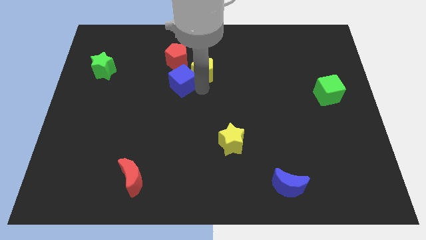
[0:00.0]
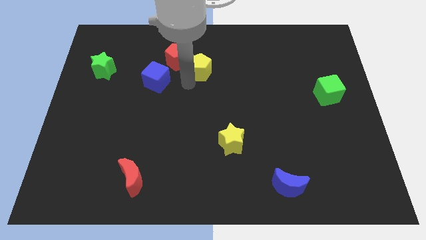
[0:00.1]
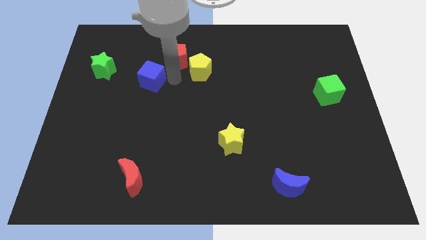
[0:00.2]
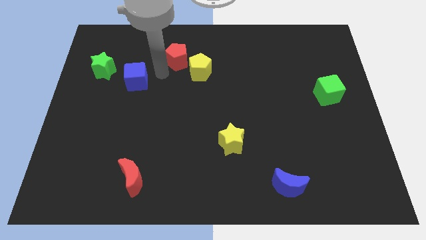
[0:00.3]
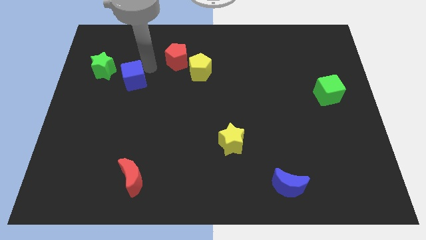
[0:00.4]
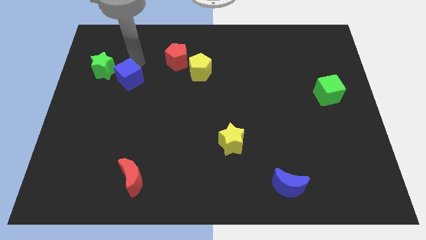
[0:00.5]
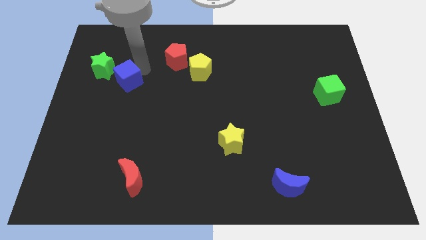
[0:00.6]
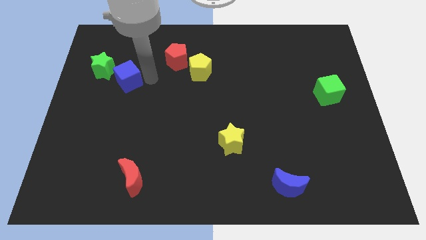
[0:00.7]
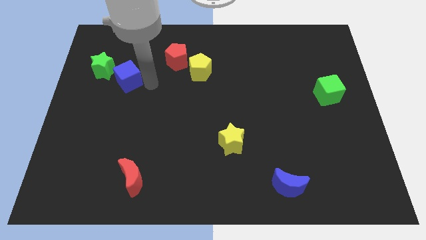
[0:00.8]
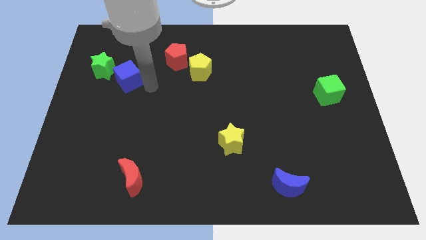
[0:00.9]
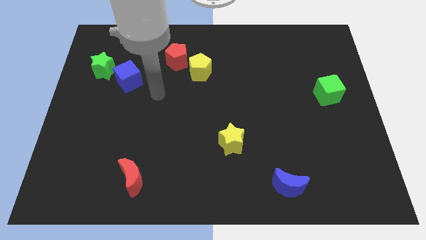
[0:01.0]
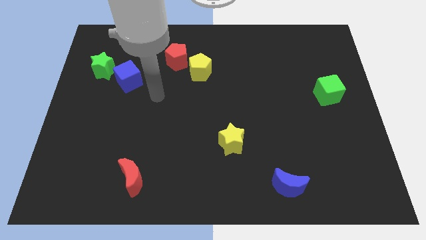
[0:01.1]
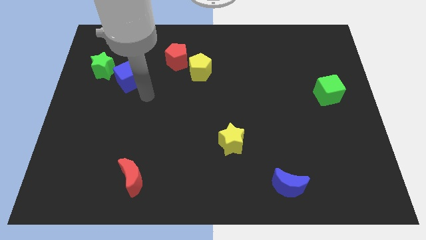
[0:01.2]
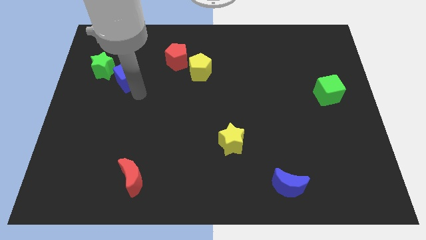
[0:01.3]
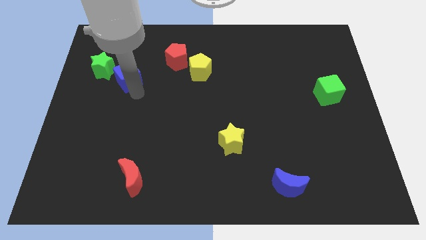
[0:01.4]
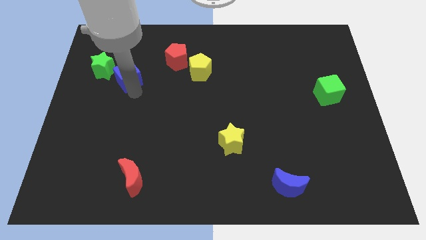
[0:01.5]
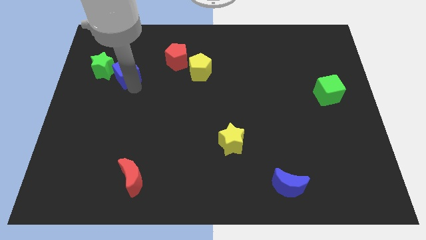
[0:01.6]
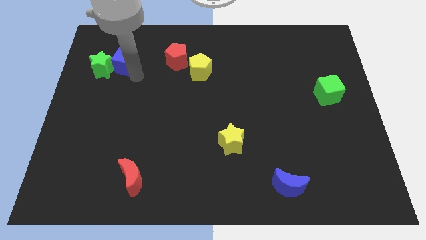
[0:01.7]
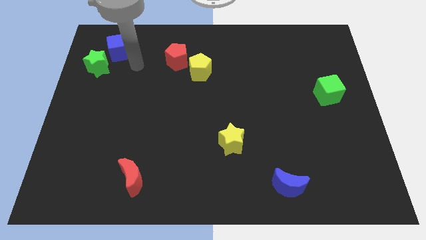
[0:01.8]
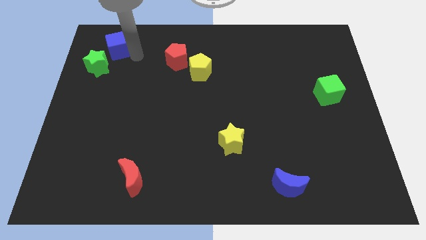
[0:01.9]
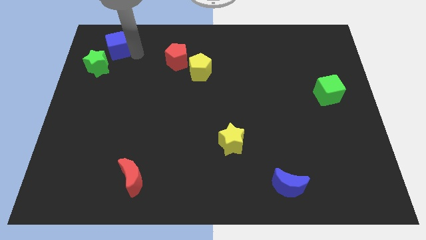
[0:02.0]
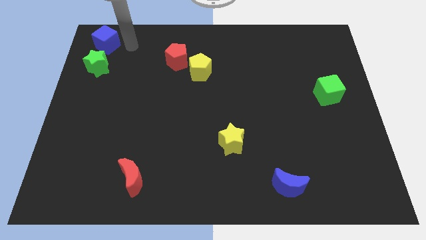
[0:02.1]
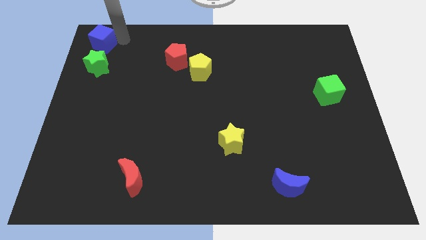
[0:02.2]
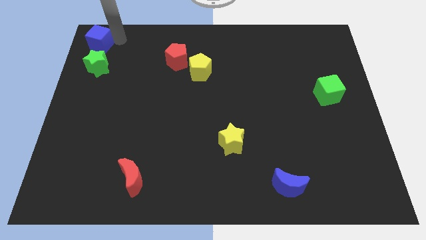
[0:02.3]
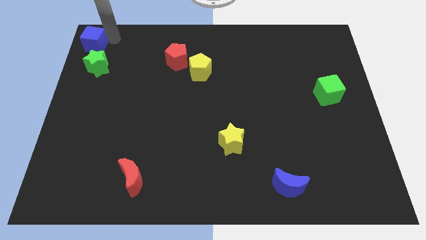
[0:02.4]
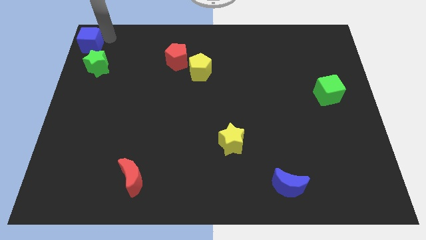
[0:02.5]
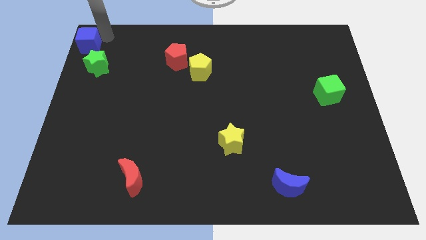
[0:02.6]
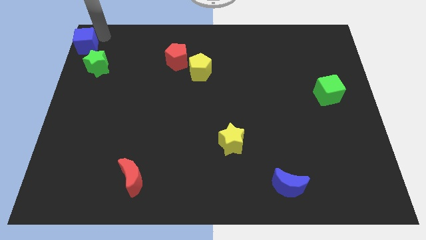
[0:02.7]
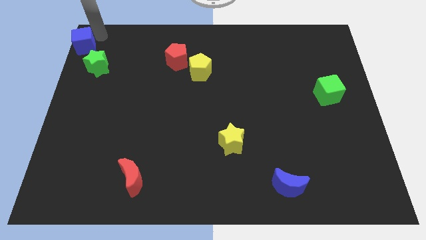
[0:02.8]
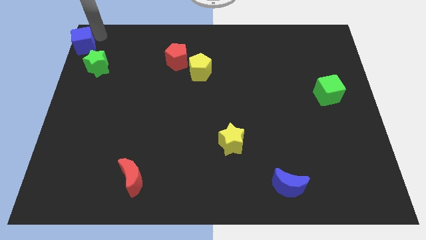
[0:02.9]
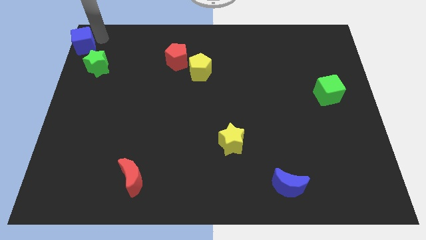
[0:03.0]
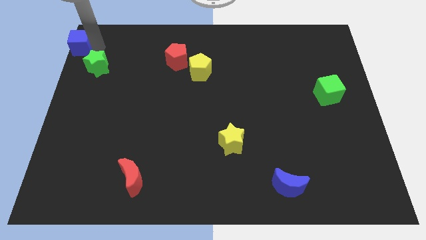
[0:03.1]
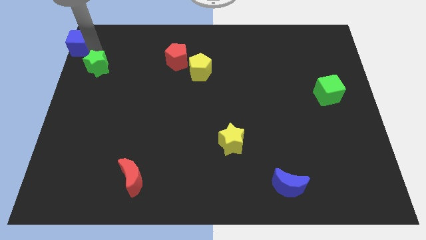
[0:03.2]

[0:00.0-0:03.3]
put the blue cube at the top left corner of the board

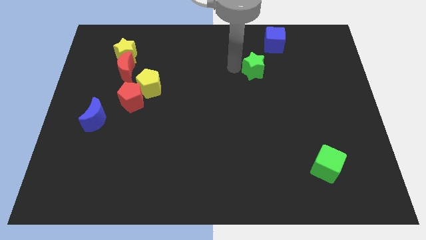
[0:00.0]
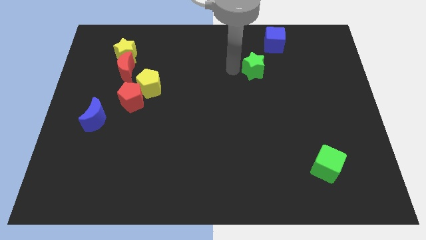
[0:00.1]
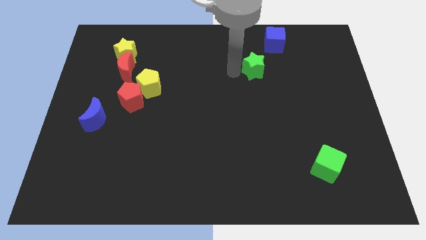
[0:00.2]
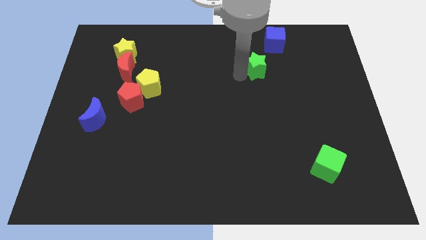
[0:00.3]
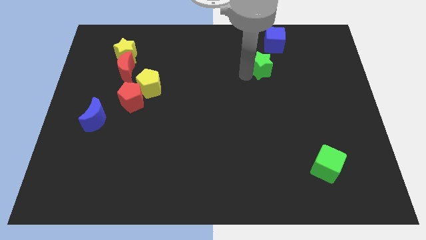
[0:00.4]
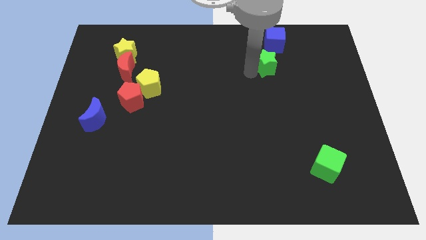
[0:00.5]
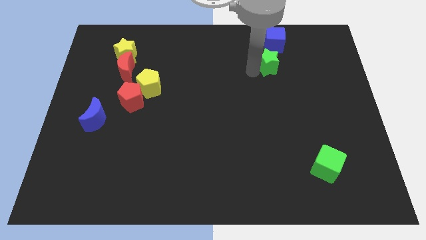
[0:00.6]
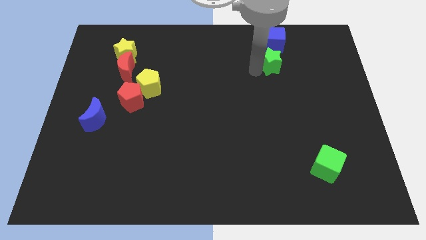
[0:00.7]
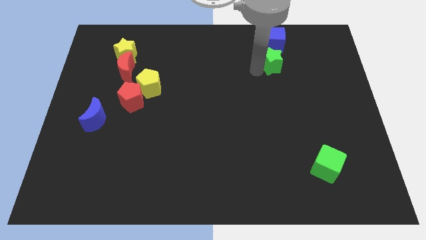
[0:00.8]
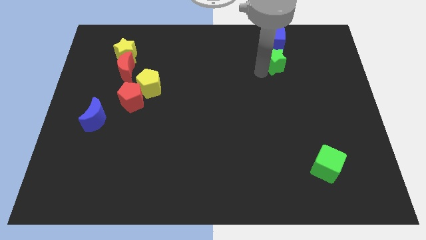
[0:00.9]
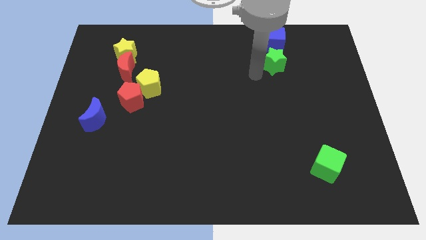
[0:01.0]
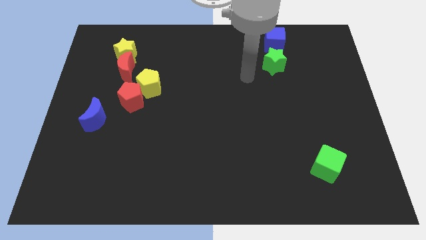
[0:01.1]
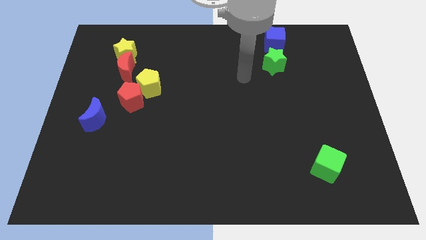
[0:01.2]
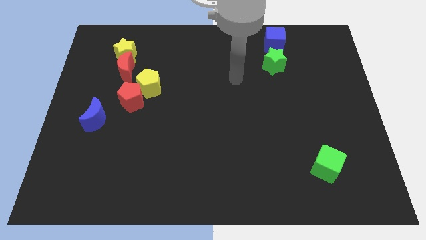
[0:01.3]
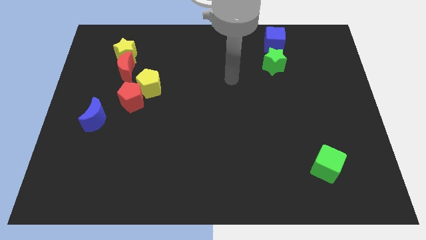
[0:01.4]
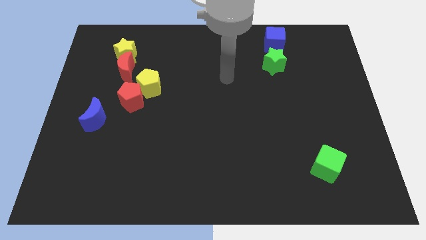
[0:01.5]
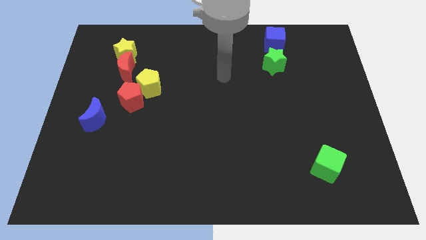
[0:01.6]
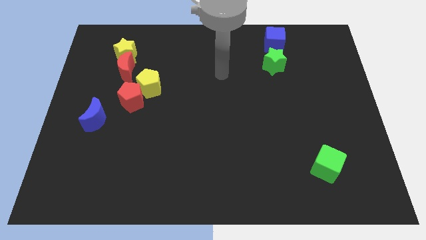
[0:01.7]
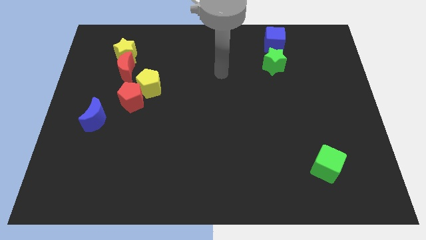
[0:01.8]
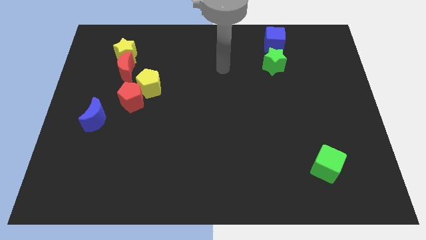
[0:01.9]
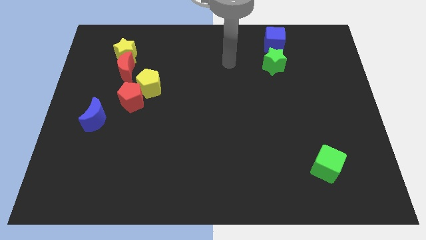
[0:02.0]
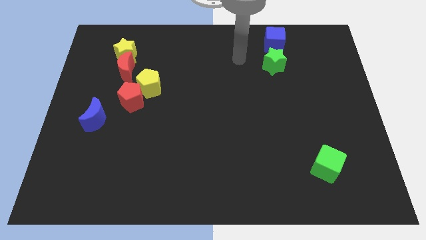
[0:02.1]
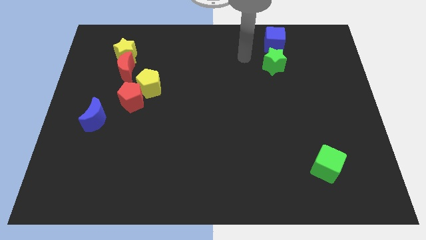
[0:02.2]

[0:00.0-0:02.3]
move the green star down to the blue cube

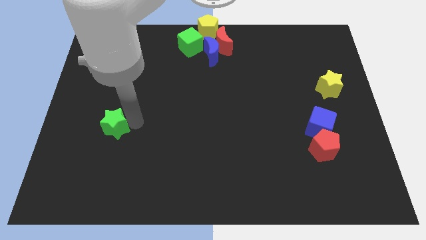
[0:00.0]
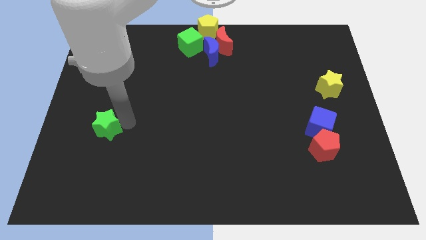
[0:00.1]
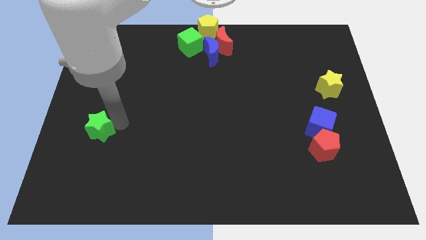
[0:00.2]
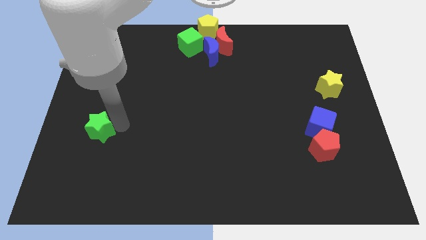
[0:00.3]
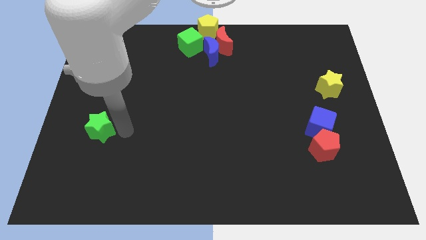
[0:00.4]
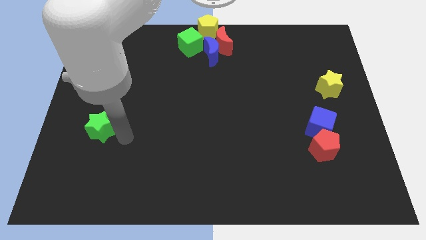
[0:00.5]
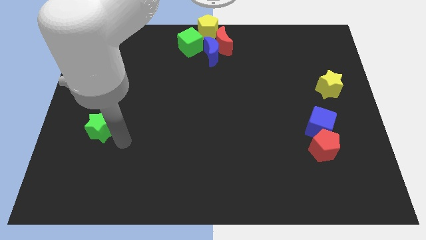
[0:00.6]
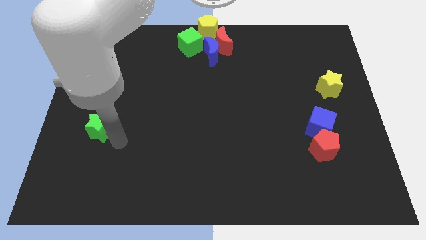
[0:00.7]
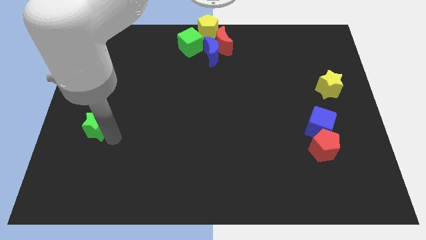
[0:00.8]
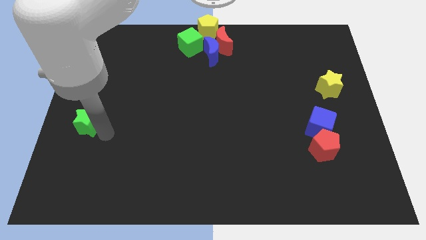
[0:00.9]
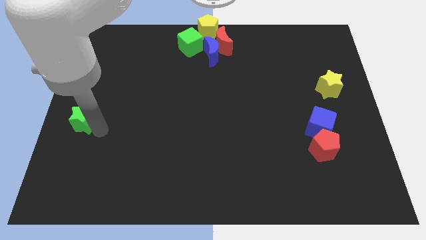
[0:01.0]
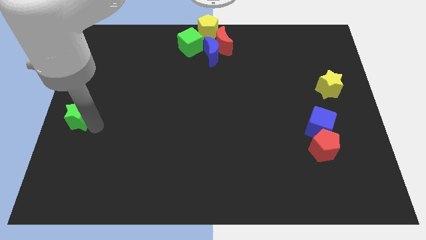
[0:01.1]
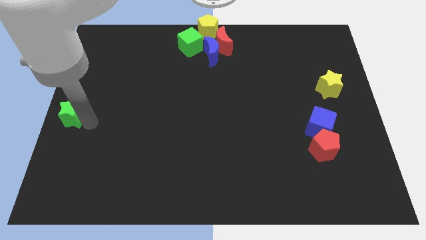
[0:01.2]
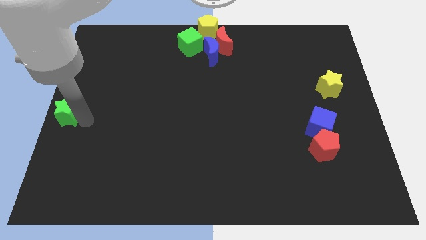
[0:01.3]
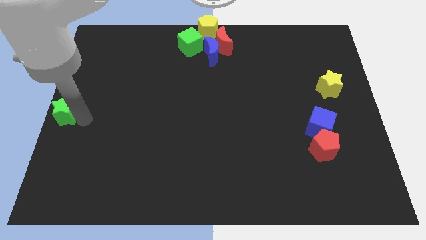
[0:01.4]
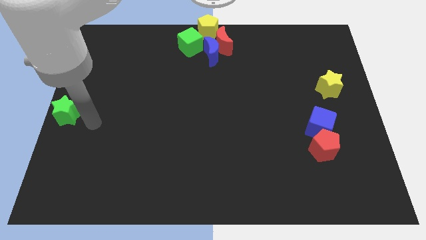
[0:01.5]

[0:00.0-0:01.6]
push the green star at the center left of the board

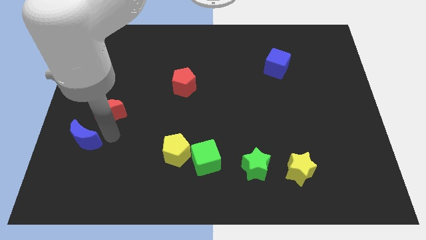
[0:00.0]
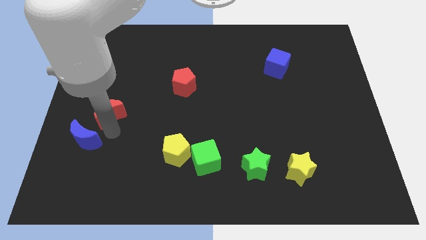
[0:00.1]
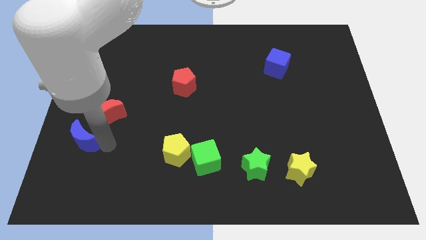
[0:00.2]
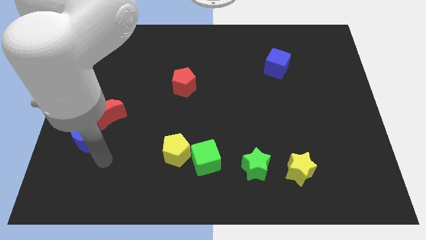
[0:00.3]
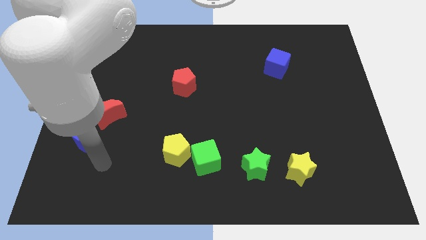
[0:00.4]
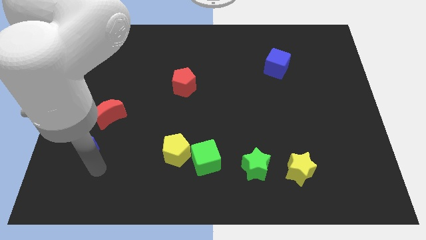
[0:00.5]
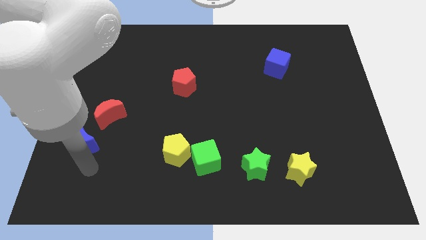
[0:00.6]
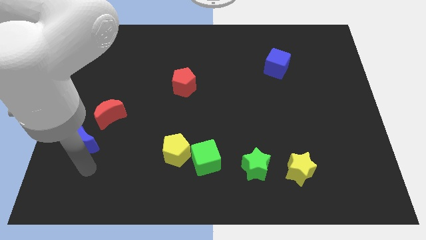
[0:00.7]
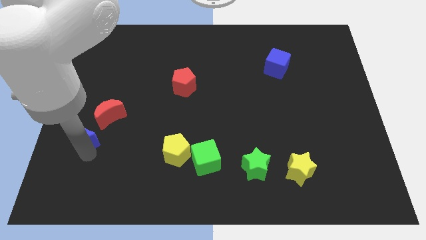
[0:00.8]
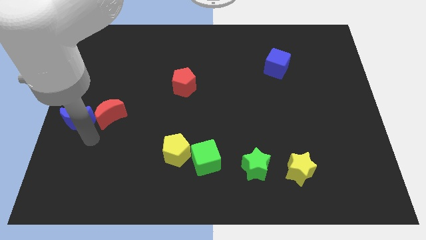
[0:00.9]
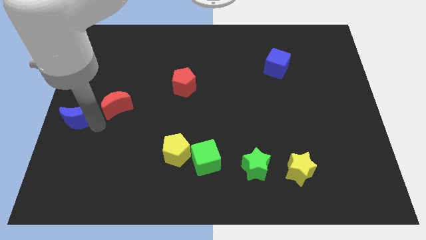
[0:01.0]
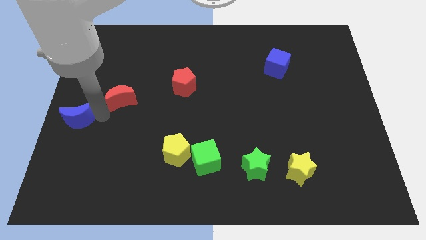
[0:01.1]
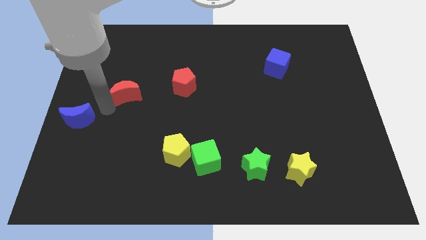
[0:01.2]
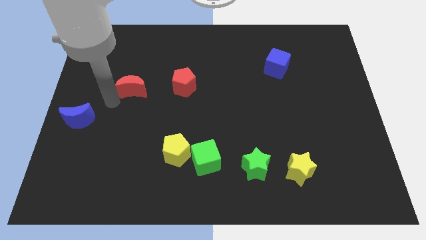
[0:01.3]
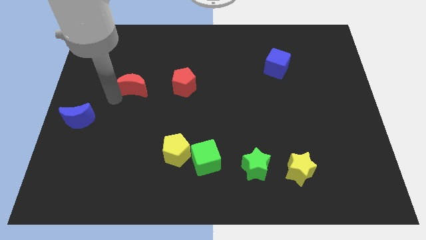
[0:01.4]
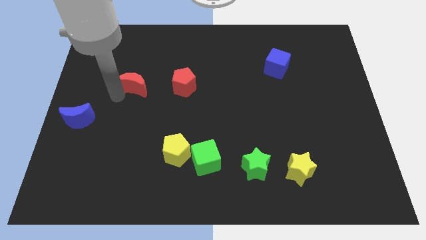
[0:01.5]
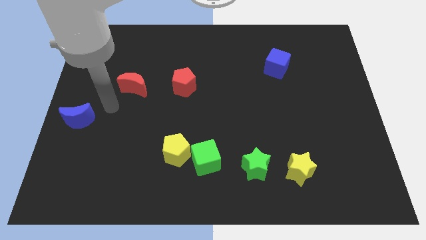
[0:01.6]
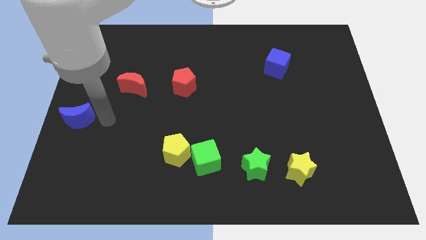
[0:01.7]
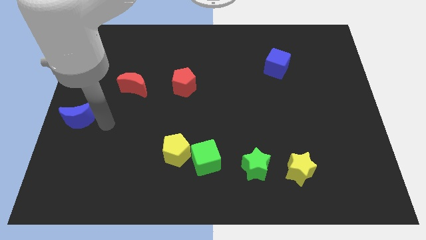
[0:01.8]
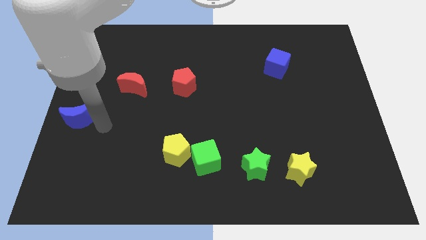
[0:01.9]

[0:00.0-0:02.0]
push the red moon to the left of the red pentagon
